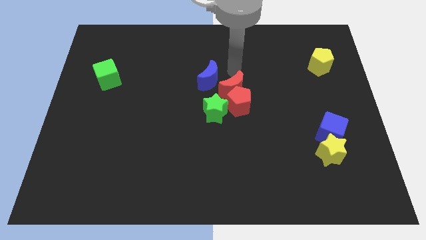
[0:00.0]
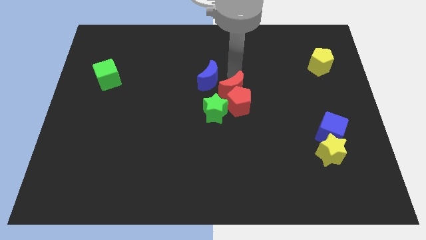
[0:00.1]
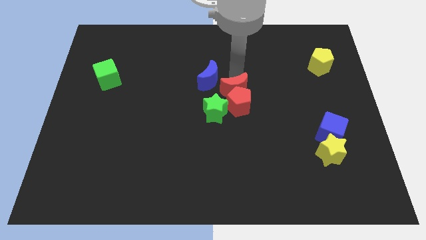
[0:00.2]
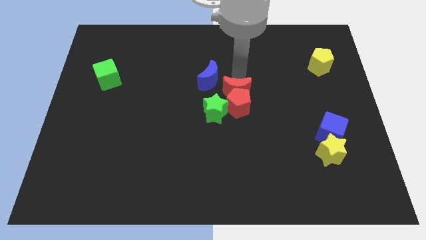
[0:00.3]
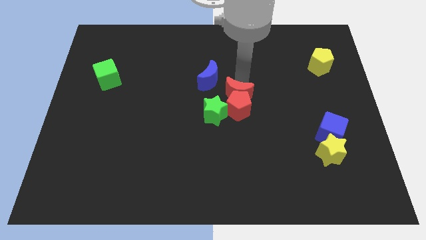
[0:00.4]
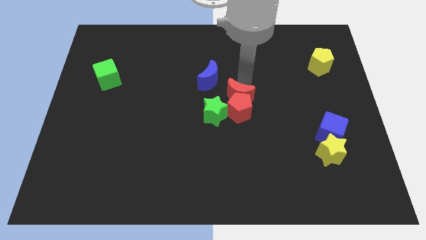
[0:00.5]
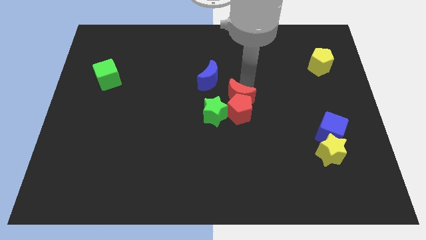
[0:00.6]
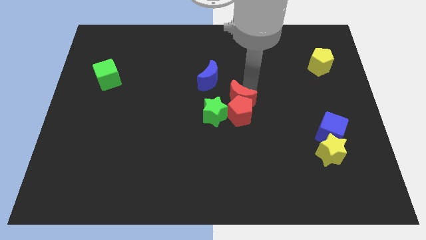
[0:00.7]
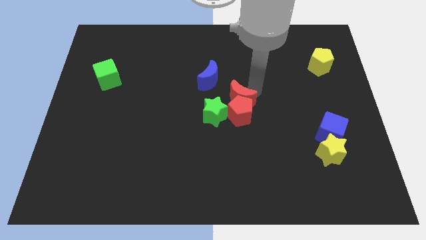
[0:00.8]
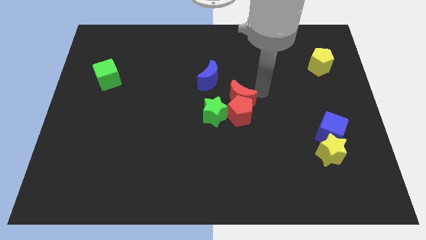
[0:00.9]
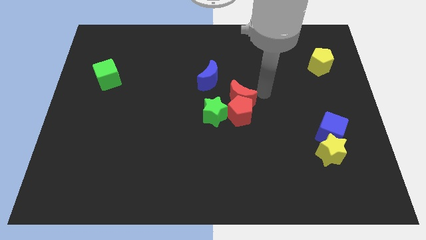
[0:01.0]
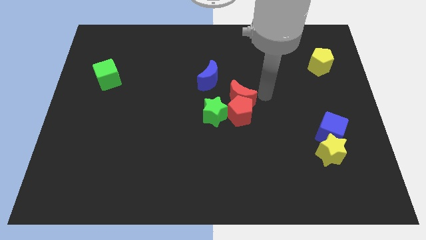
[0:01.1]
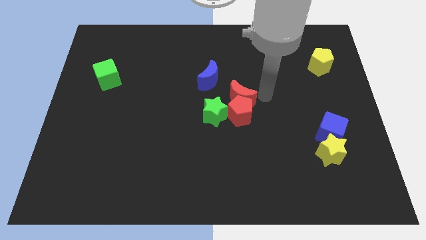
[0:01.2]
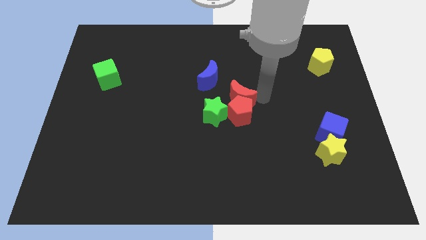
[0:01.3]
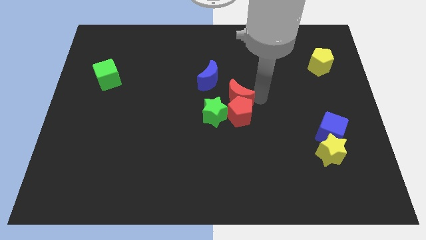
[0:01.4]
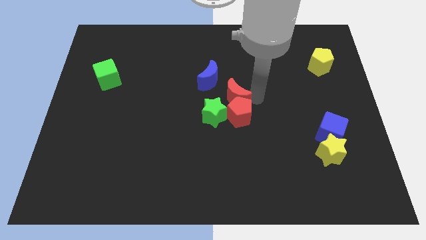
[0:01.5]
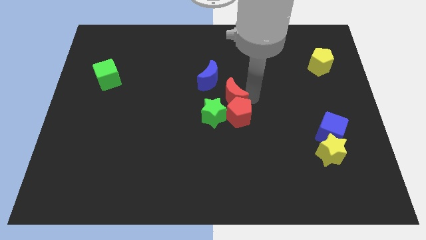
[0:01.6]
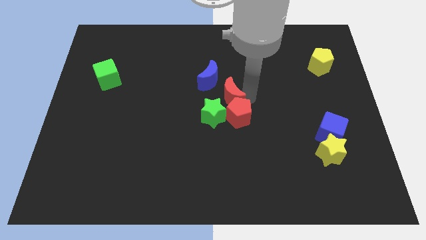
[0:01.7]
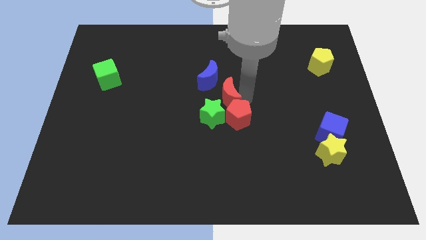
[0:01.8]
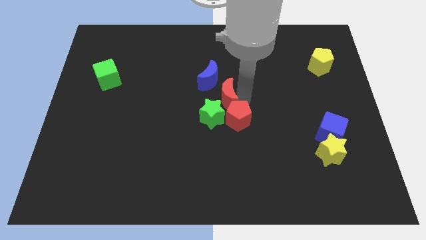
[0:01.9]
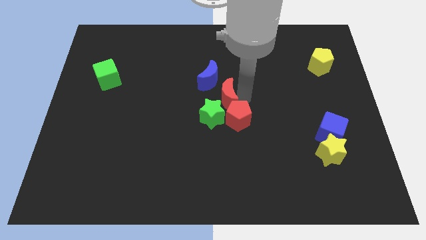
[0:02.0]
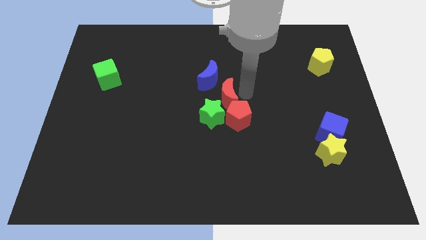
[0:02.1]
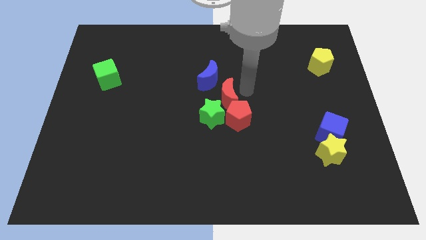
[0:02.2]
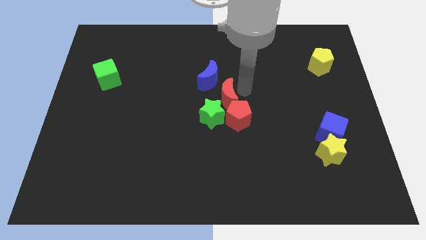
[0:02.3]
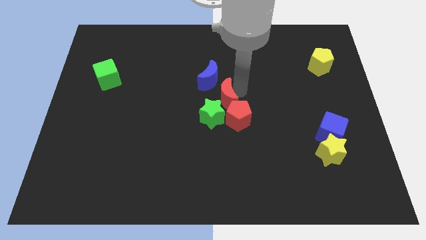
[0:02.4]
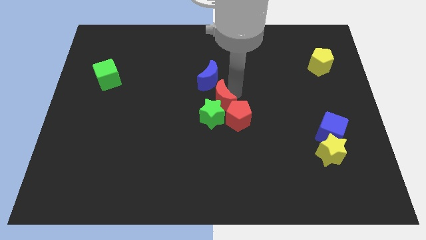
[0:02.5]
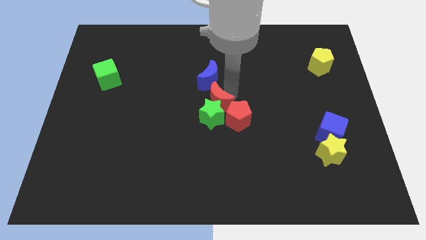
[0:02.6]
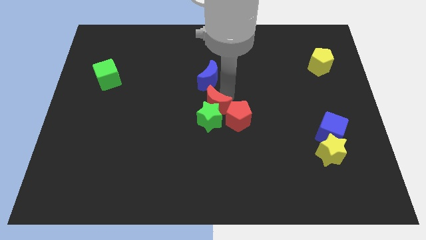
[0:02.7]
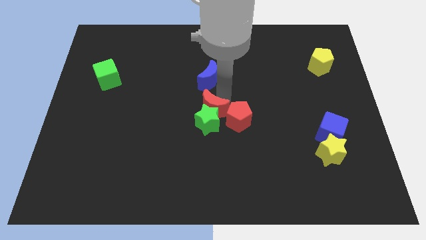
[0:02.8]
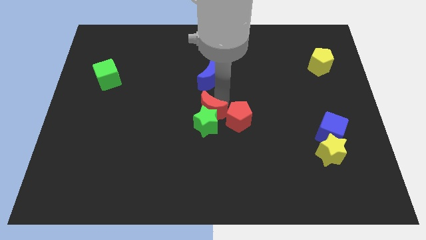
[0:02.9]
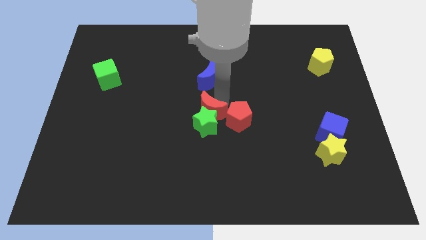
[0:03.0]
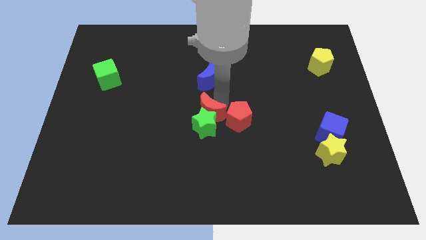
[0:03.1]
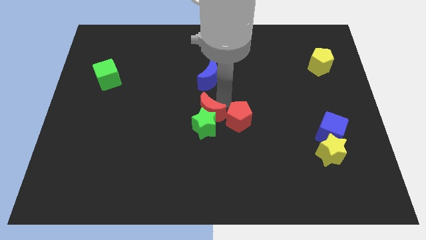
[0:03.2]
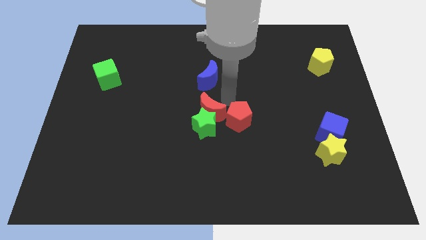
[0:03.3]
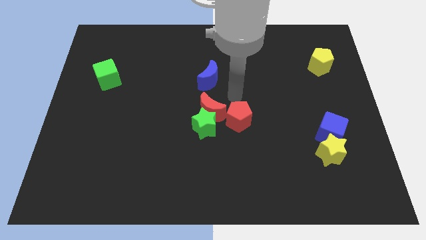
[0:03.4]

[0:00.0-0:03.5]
move red moon and green star downwards a bit

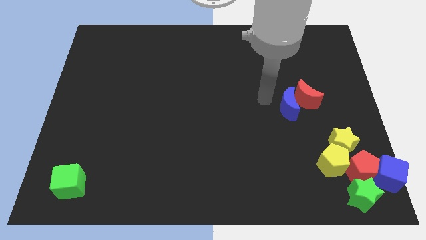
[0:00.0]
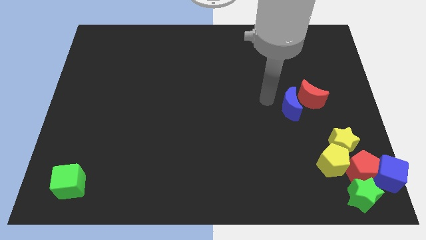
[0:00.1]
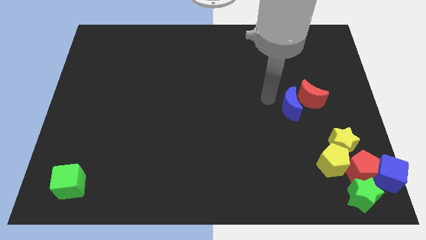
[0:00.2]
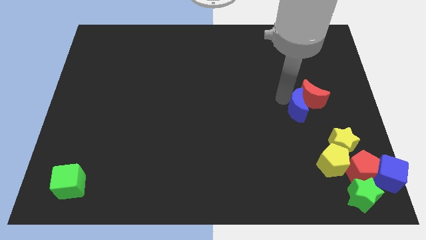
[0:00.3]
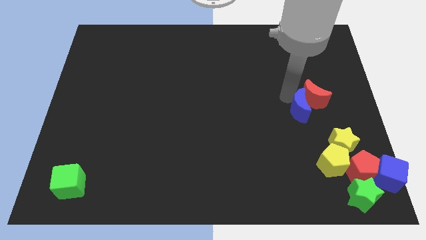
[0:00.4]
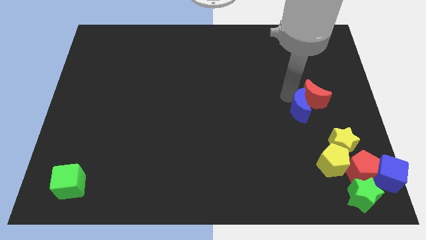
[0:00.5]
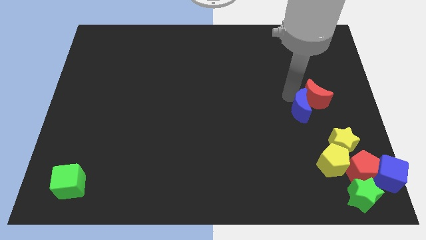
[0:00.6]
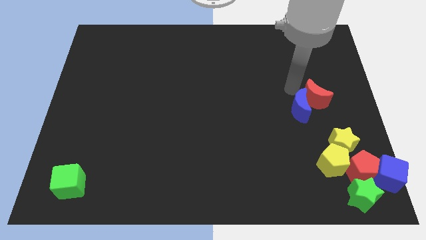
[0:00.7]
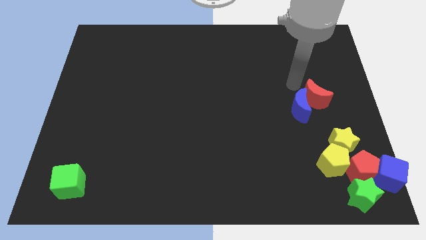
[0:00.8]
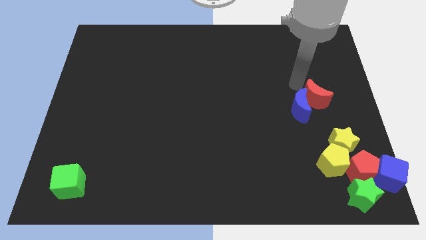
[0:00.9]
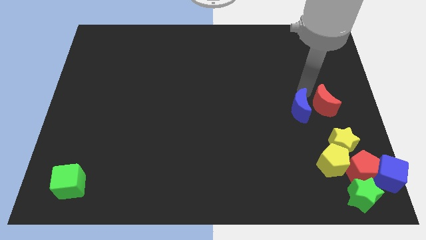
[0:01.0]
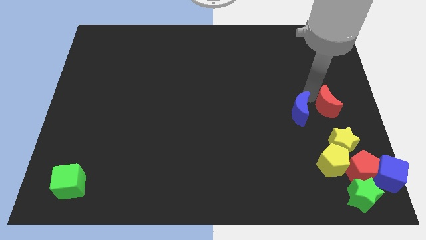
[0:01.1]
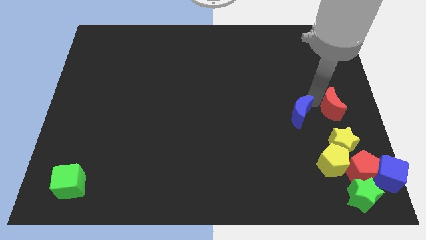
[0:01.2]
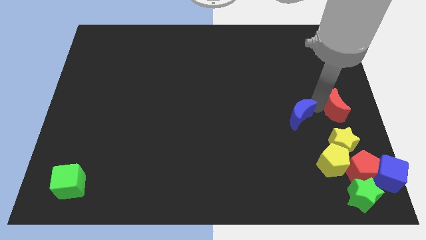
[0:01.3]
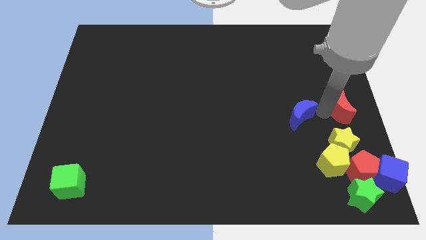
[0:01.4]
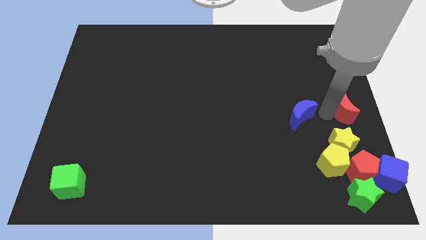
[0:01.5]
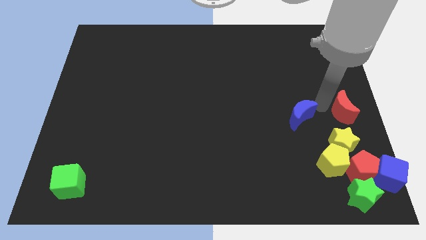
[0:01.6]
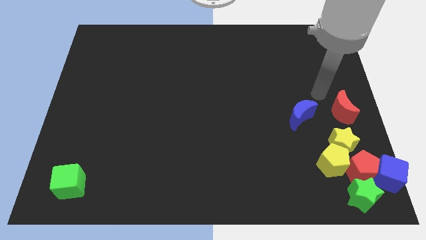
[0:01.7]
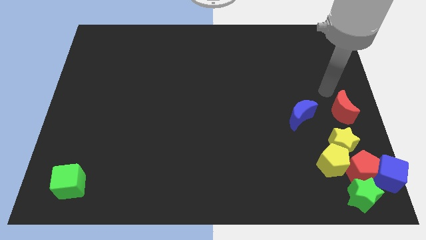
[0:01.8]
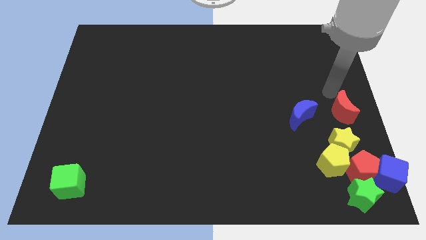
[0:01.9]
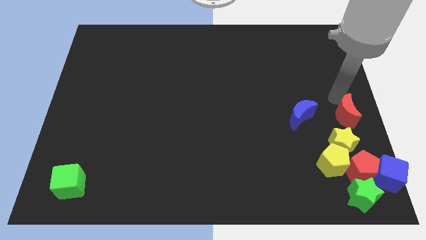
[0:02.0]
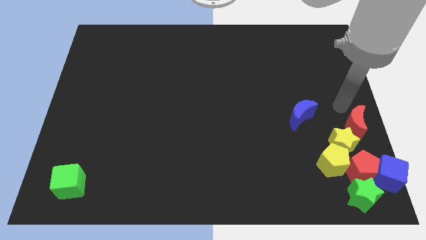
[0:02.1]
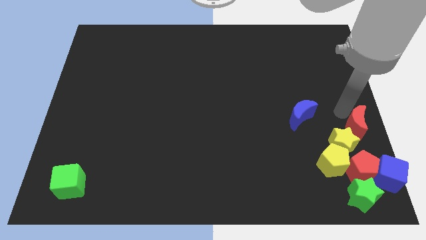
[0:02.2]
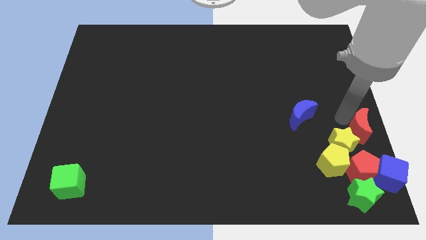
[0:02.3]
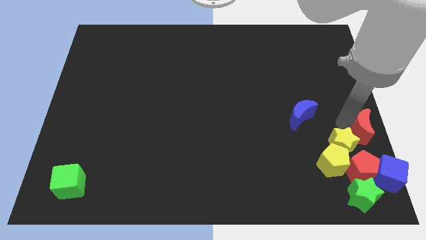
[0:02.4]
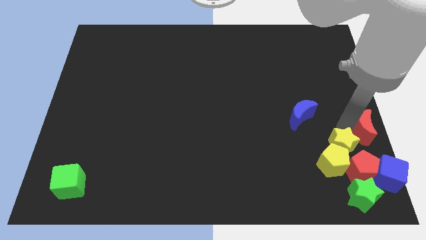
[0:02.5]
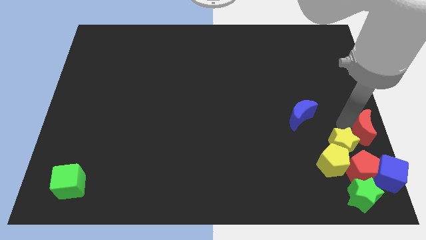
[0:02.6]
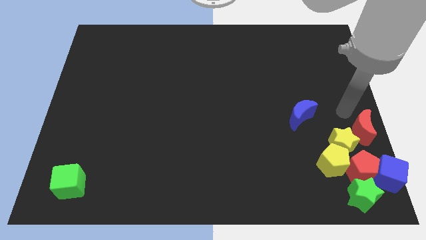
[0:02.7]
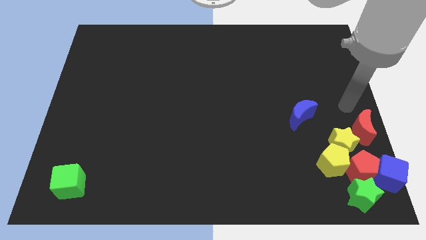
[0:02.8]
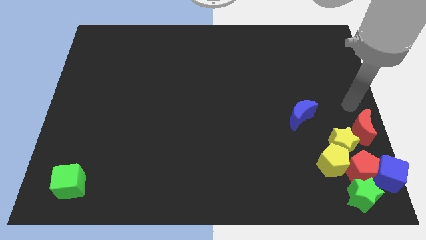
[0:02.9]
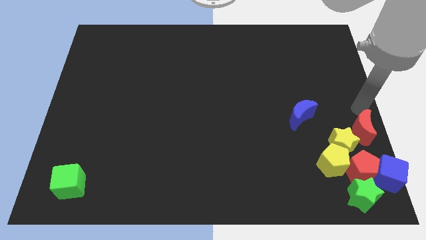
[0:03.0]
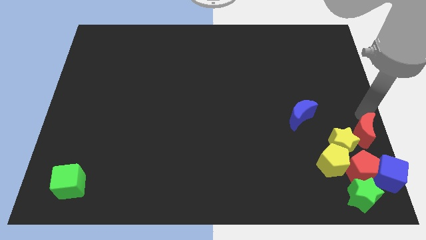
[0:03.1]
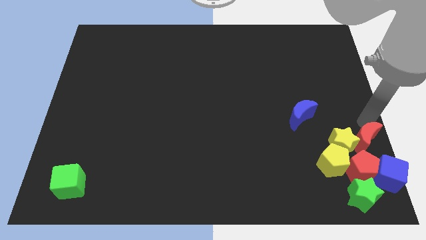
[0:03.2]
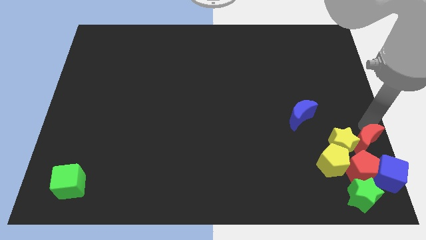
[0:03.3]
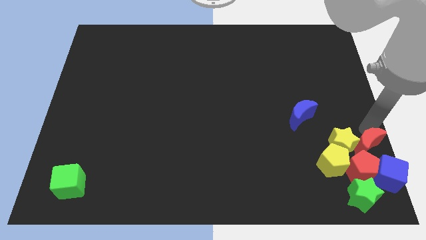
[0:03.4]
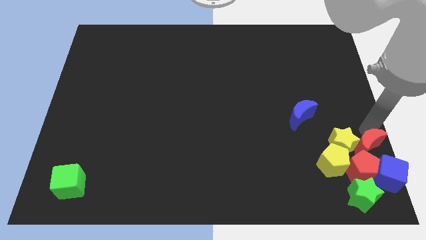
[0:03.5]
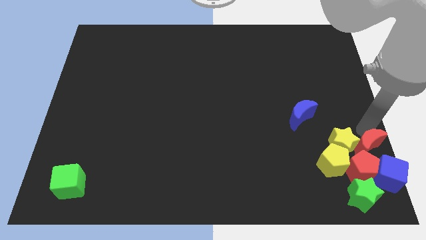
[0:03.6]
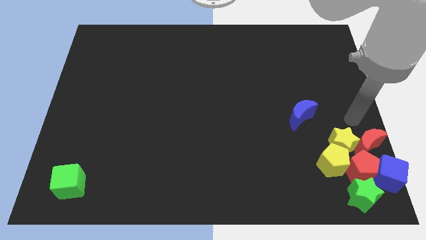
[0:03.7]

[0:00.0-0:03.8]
place the red moon to the top side of the red pentagon

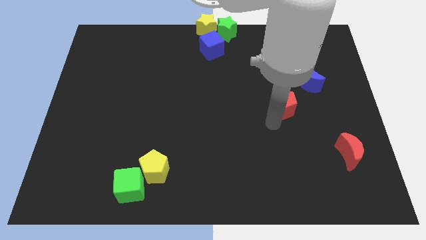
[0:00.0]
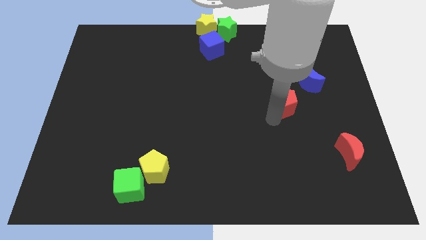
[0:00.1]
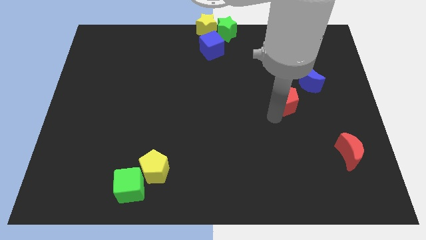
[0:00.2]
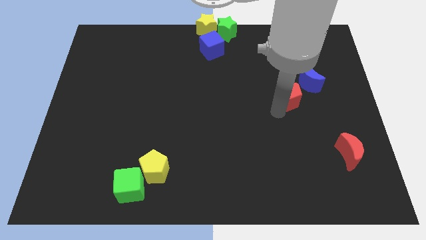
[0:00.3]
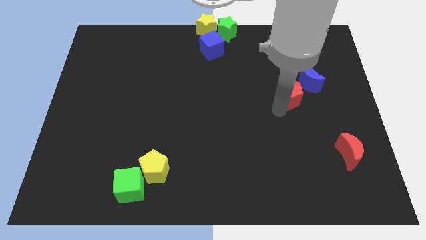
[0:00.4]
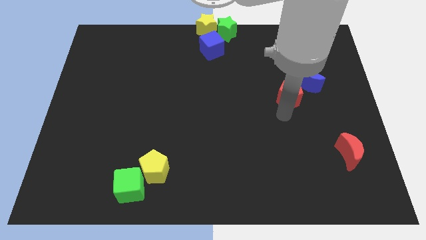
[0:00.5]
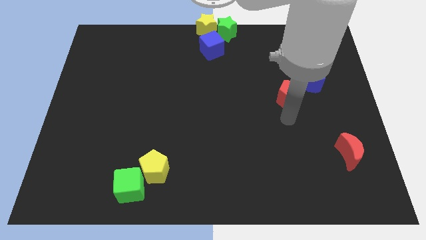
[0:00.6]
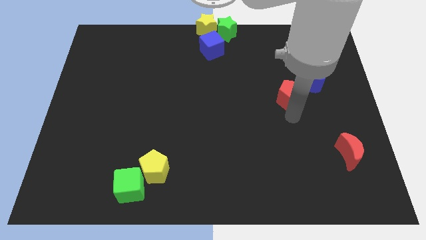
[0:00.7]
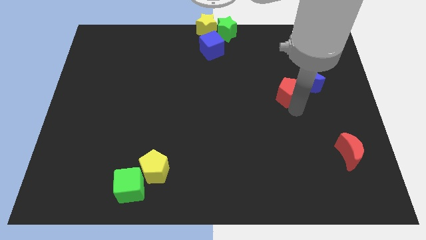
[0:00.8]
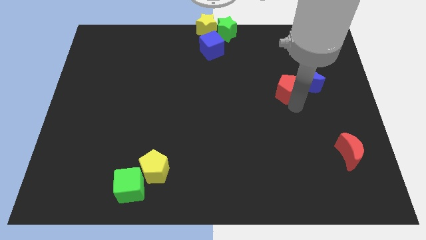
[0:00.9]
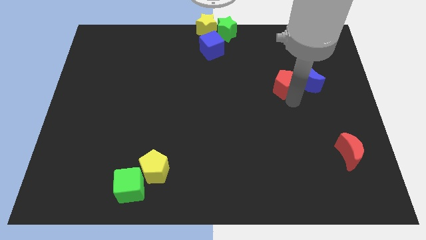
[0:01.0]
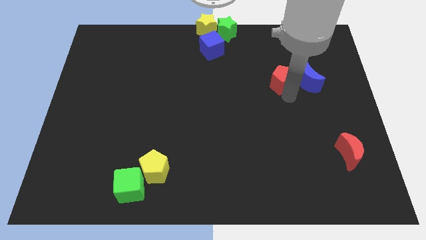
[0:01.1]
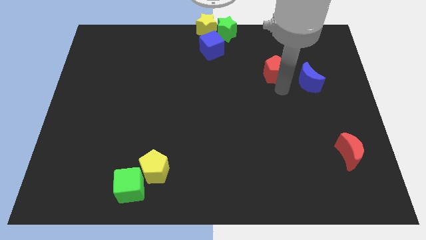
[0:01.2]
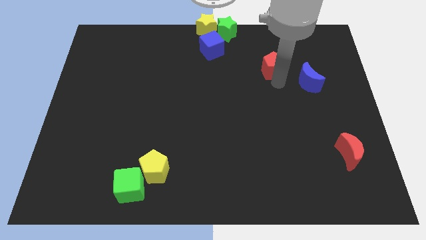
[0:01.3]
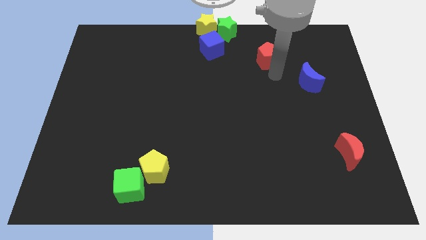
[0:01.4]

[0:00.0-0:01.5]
push the red pentagon diagonally top left to the blue moon

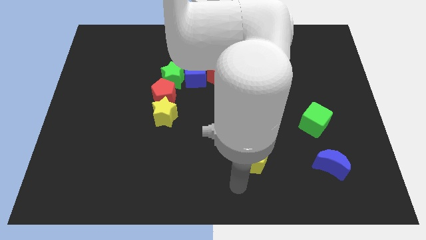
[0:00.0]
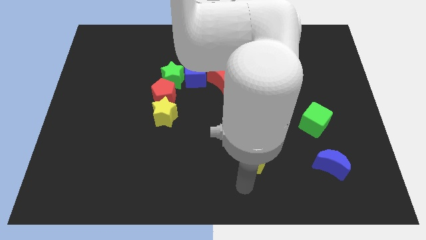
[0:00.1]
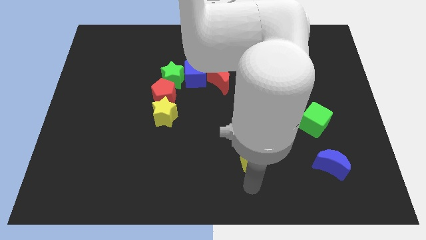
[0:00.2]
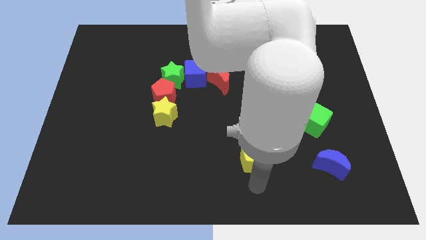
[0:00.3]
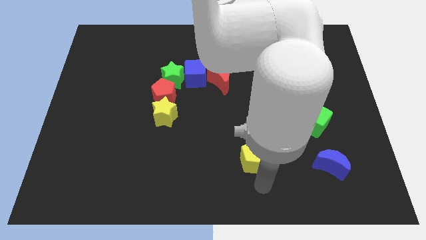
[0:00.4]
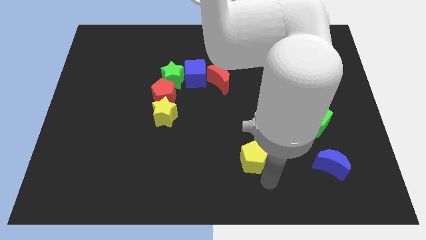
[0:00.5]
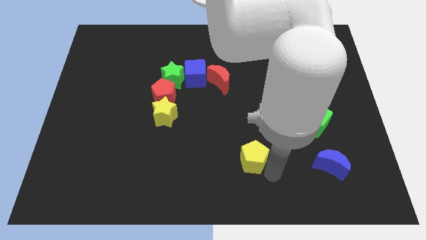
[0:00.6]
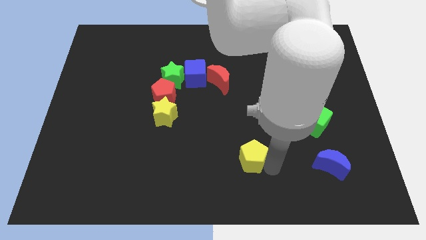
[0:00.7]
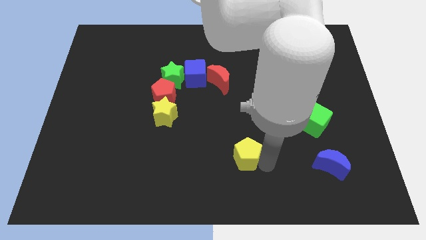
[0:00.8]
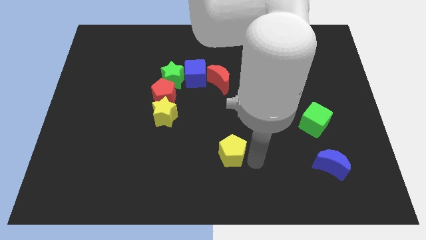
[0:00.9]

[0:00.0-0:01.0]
touch the bottom right of the yellow pentagon
